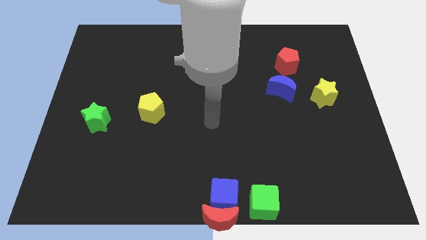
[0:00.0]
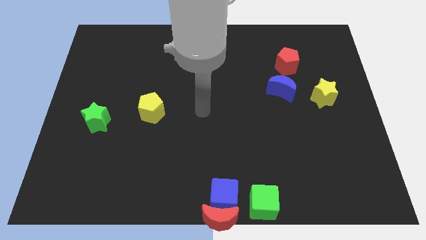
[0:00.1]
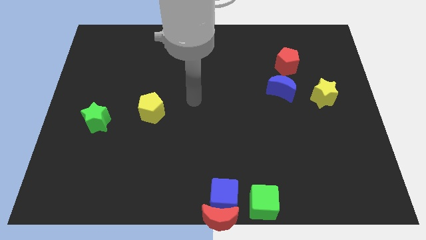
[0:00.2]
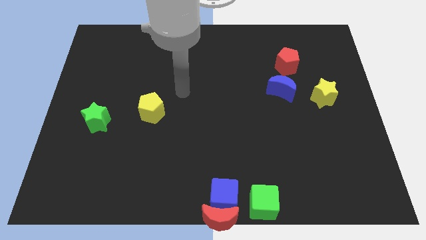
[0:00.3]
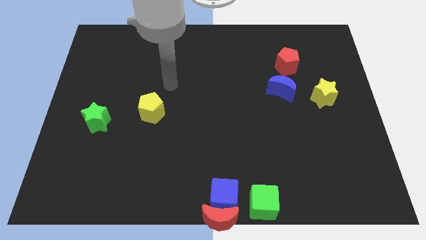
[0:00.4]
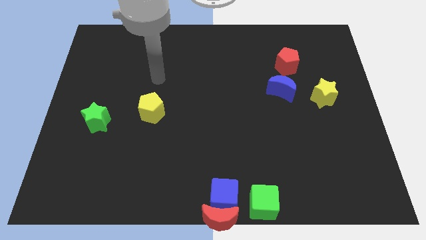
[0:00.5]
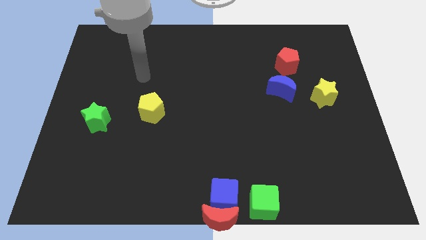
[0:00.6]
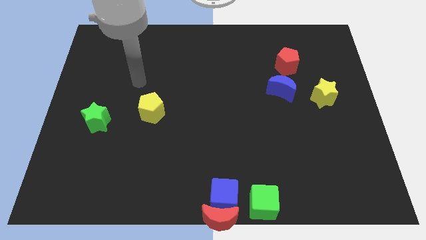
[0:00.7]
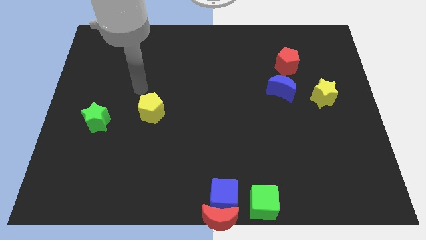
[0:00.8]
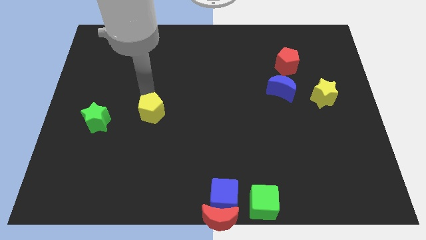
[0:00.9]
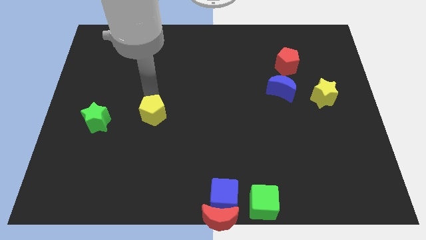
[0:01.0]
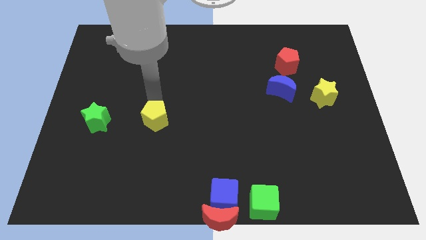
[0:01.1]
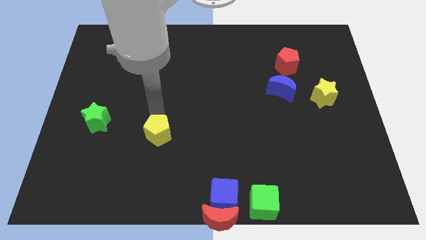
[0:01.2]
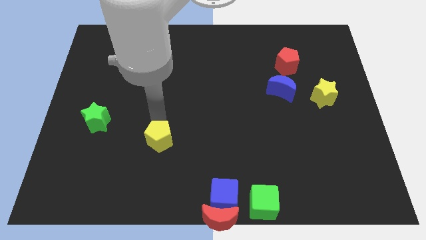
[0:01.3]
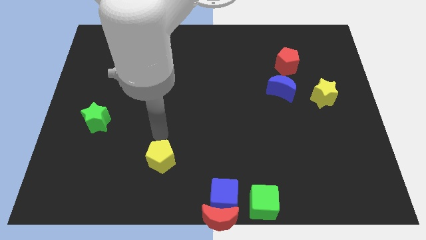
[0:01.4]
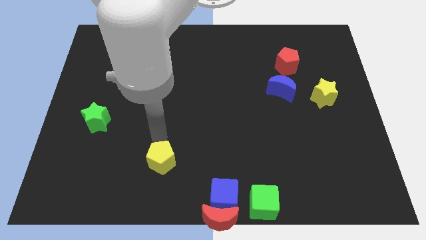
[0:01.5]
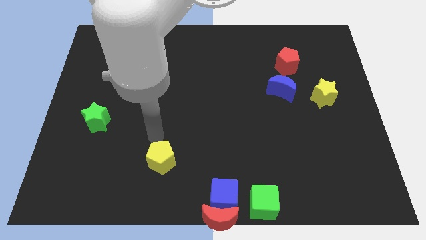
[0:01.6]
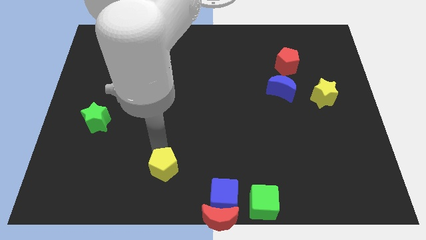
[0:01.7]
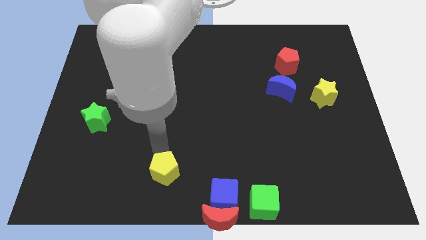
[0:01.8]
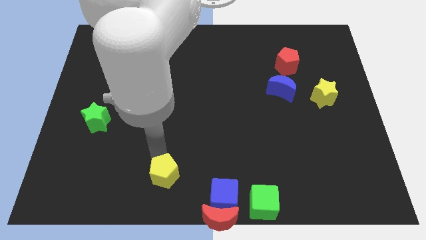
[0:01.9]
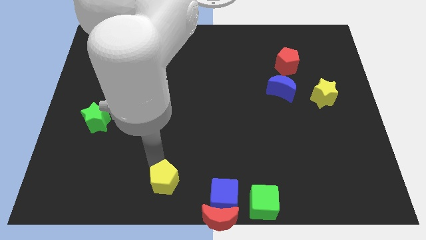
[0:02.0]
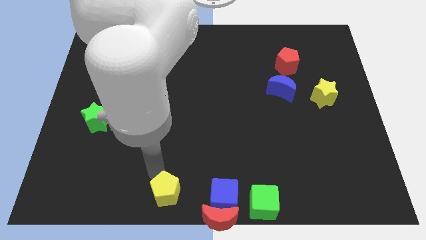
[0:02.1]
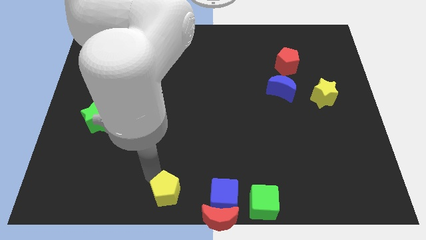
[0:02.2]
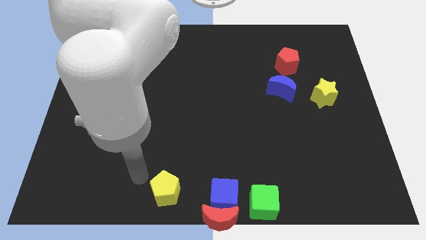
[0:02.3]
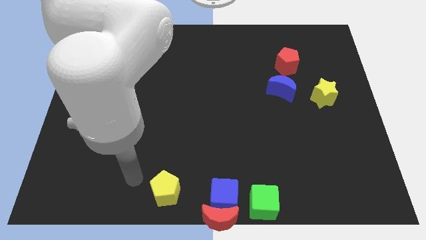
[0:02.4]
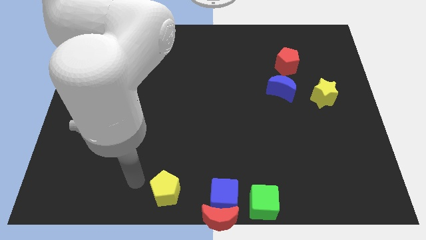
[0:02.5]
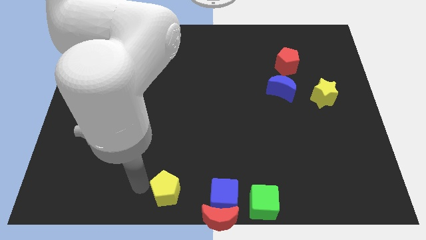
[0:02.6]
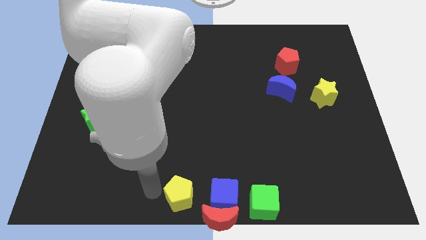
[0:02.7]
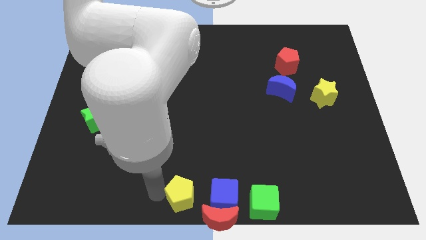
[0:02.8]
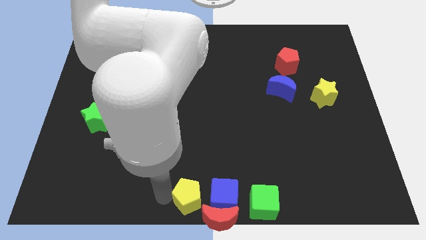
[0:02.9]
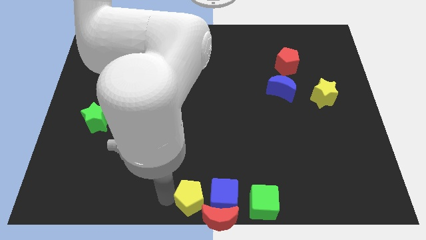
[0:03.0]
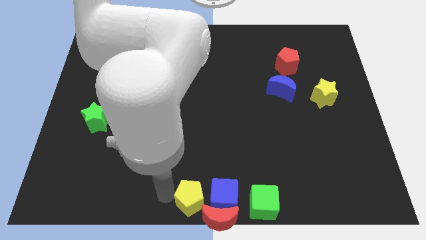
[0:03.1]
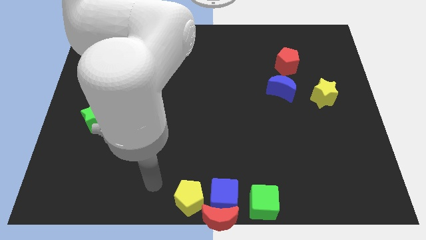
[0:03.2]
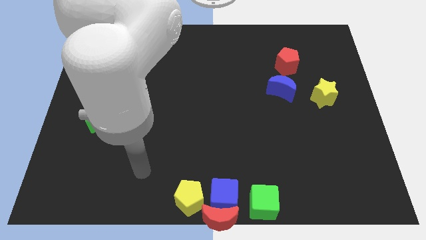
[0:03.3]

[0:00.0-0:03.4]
place the yellow pentagon left to the blue cube

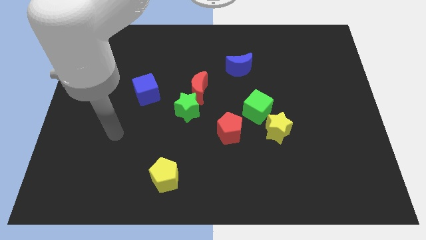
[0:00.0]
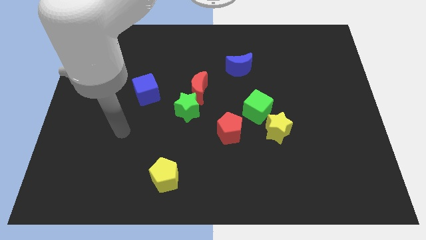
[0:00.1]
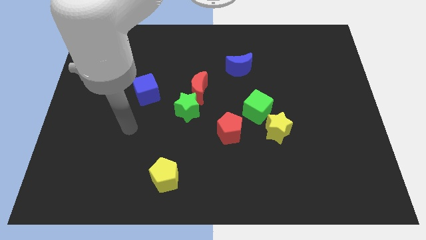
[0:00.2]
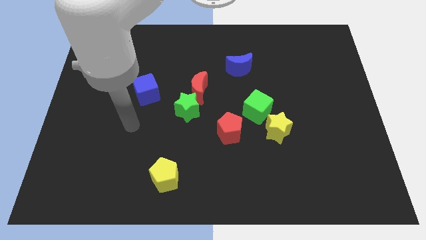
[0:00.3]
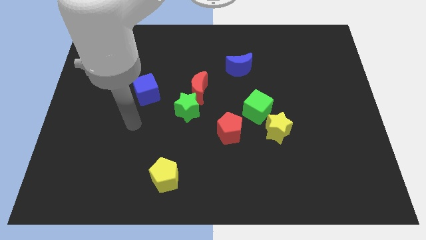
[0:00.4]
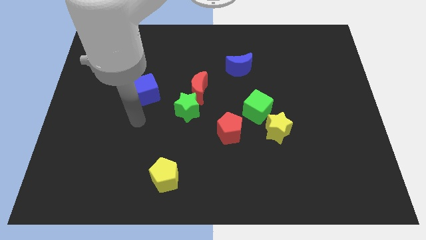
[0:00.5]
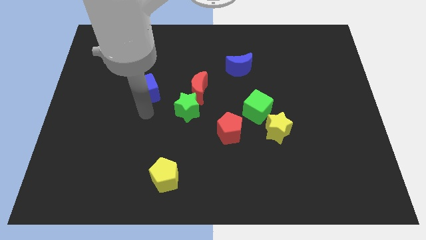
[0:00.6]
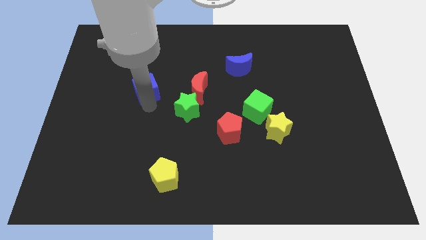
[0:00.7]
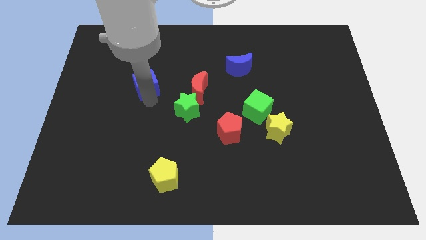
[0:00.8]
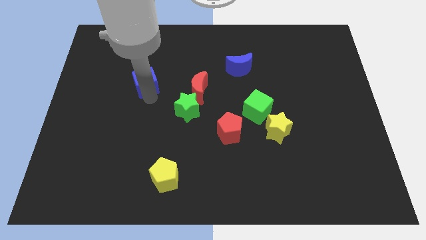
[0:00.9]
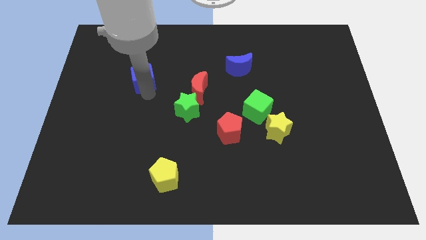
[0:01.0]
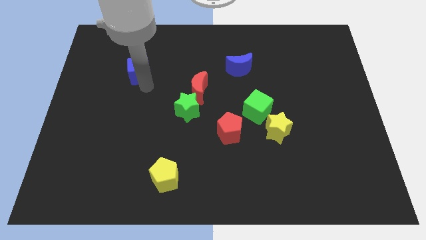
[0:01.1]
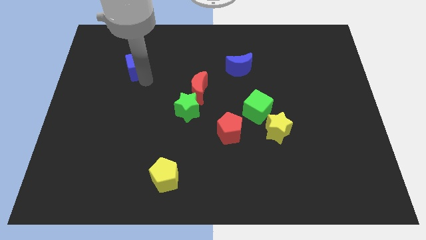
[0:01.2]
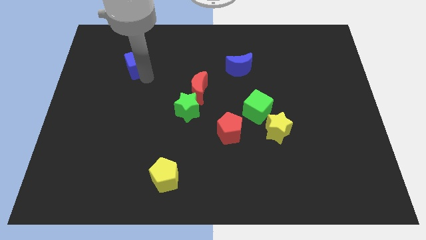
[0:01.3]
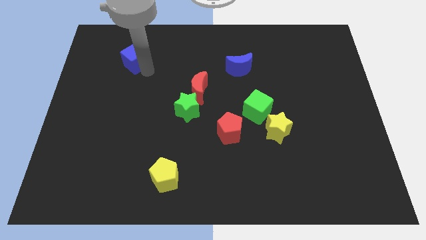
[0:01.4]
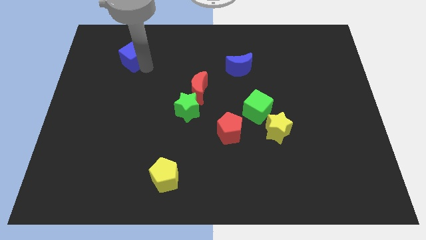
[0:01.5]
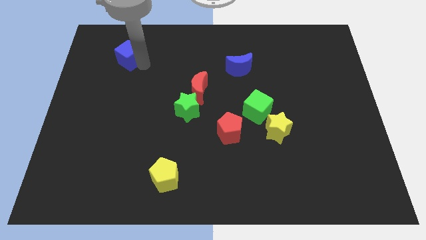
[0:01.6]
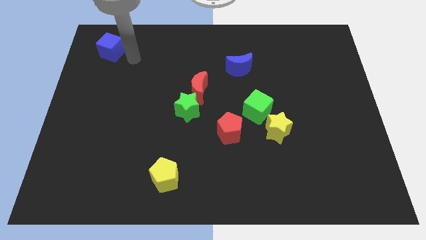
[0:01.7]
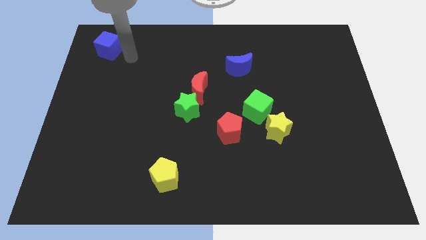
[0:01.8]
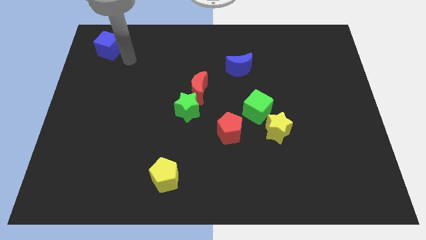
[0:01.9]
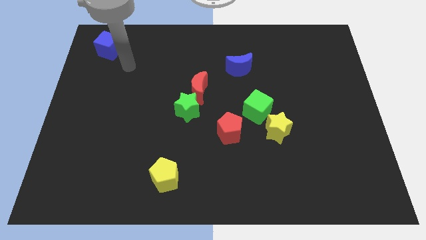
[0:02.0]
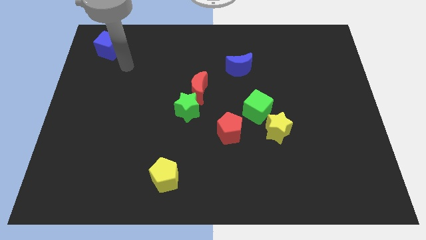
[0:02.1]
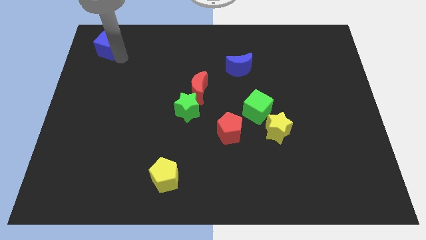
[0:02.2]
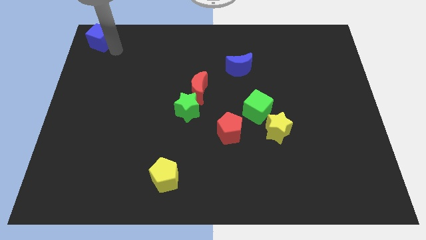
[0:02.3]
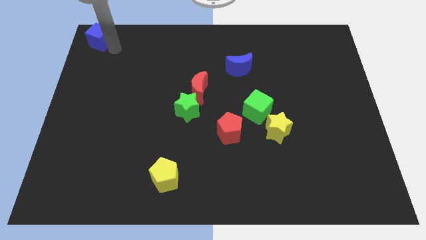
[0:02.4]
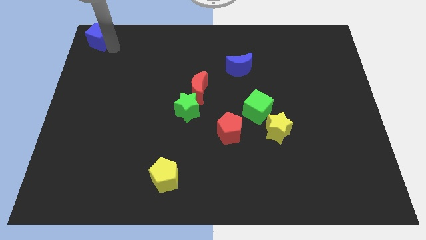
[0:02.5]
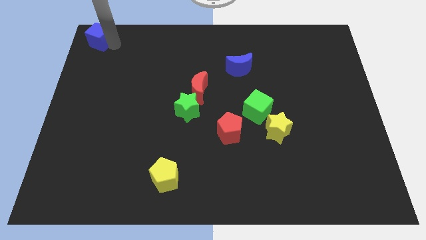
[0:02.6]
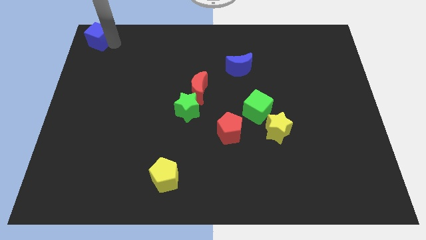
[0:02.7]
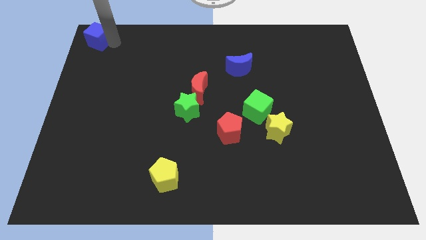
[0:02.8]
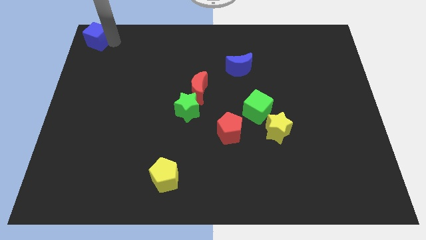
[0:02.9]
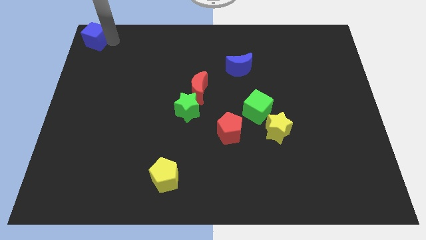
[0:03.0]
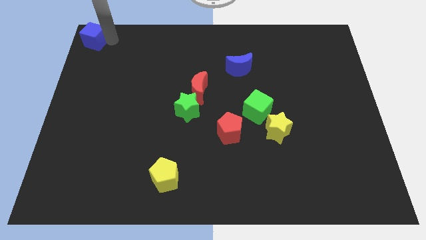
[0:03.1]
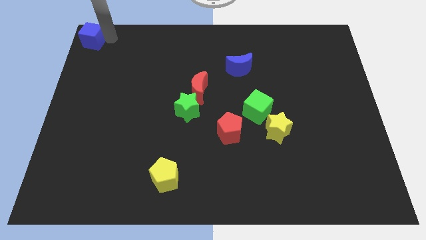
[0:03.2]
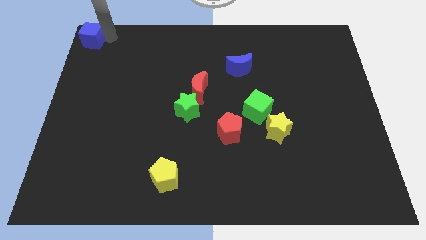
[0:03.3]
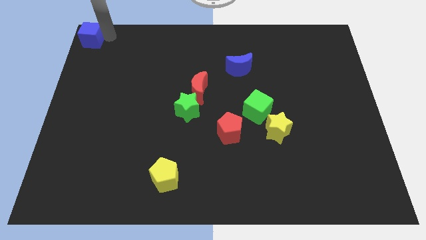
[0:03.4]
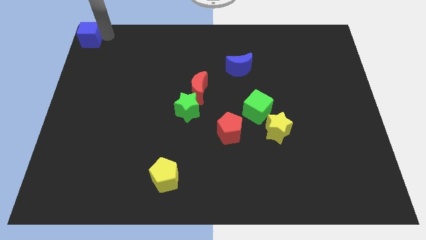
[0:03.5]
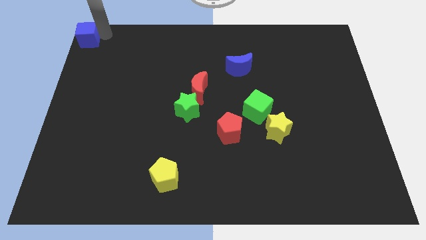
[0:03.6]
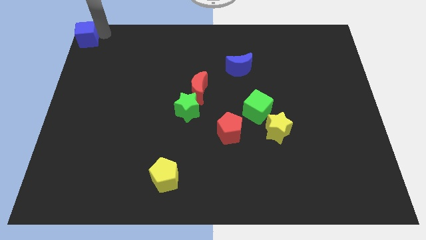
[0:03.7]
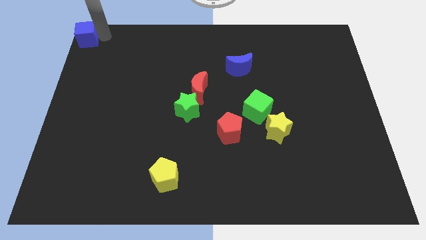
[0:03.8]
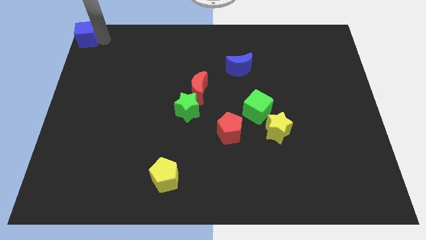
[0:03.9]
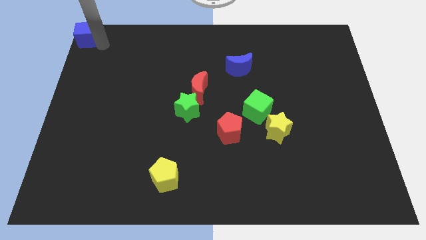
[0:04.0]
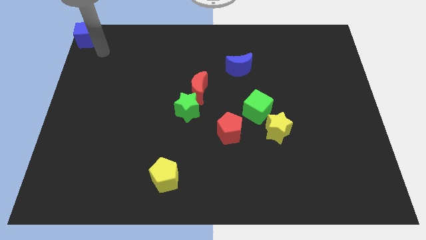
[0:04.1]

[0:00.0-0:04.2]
move the blue cube to the top left of the board

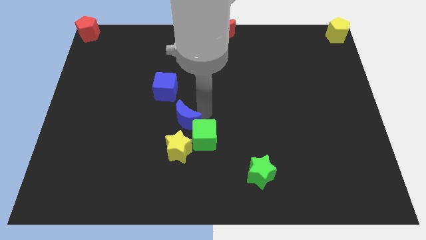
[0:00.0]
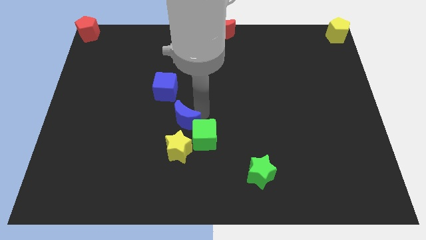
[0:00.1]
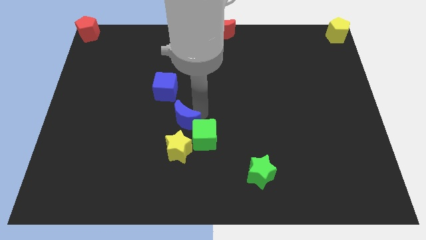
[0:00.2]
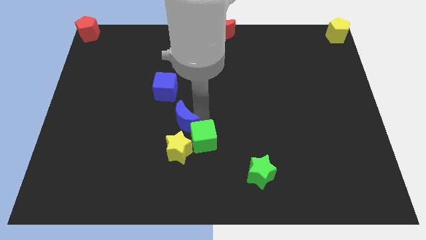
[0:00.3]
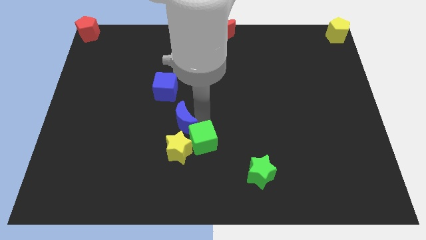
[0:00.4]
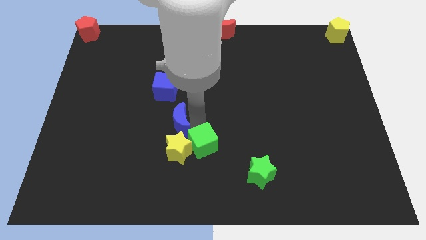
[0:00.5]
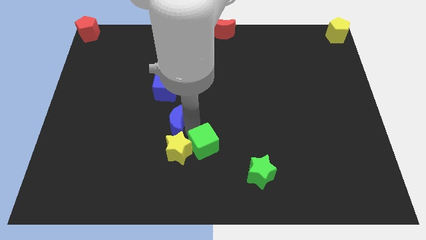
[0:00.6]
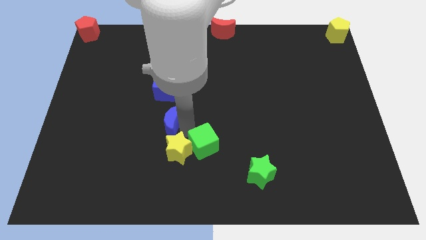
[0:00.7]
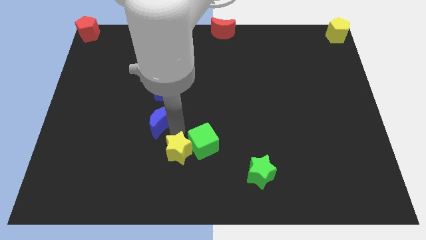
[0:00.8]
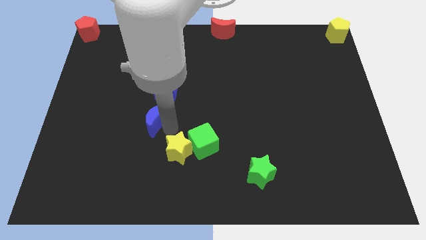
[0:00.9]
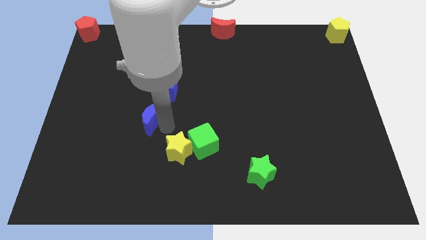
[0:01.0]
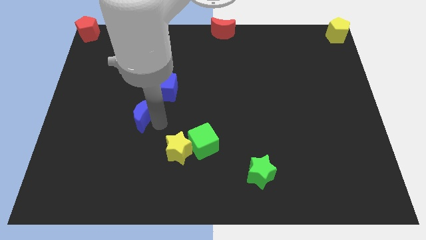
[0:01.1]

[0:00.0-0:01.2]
push the blue moon to the bottom of the blue cube

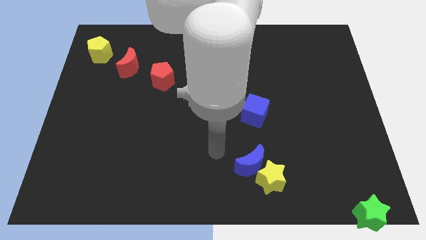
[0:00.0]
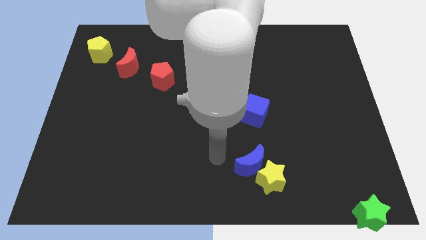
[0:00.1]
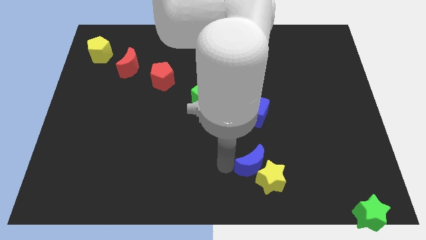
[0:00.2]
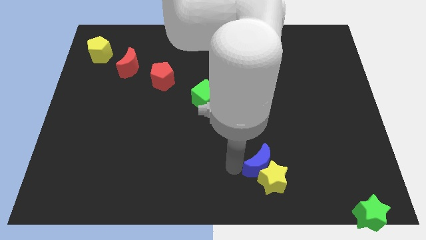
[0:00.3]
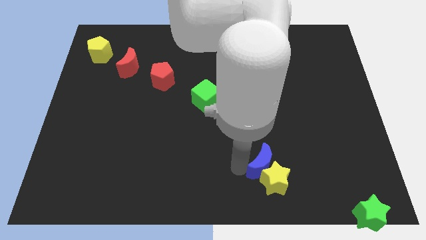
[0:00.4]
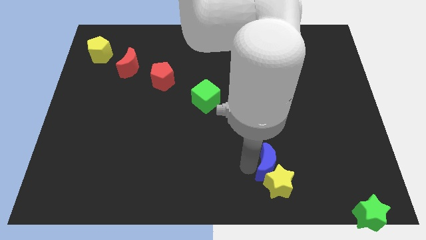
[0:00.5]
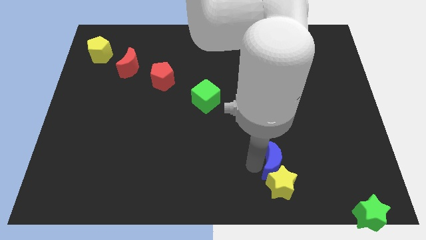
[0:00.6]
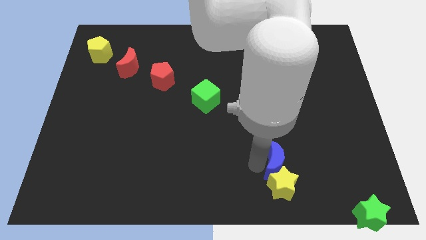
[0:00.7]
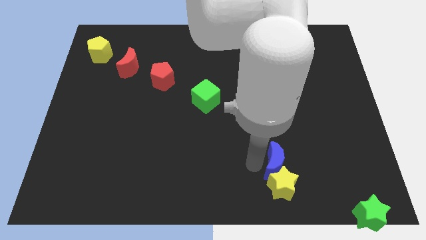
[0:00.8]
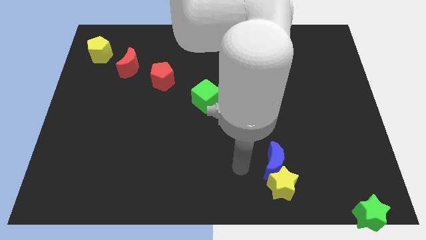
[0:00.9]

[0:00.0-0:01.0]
move blue moon into yellow star
